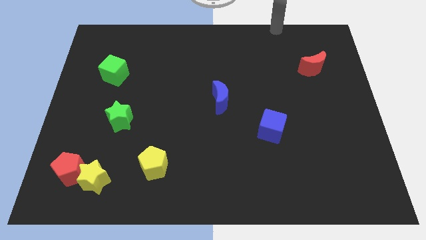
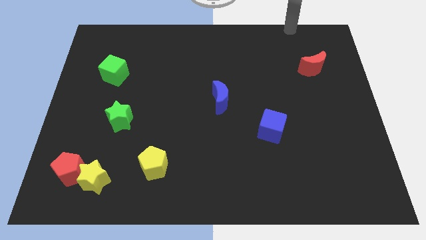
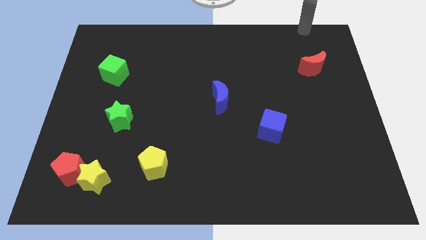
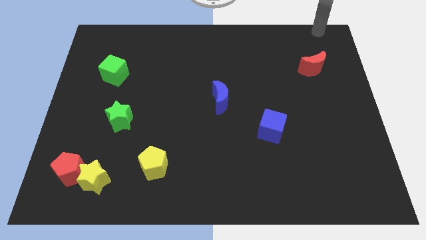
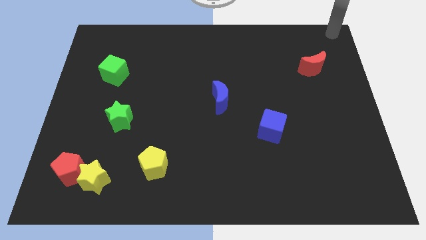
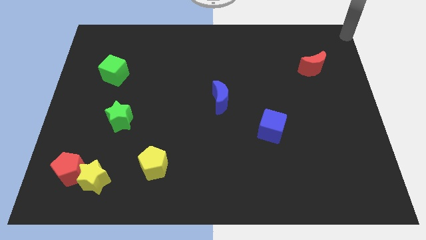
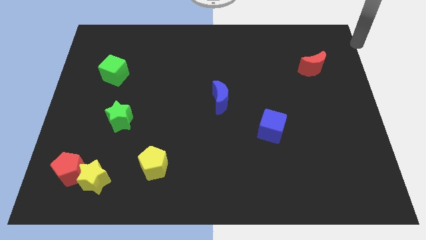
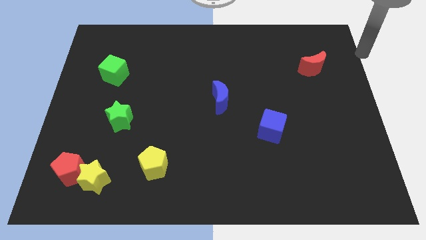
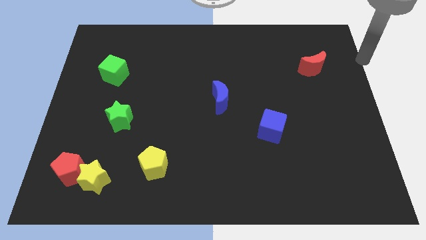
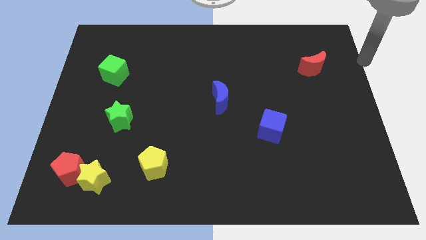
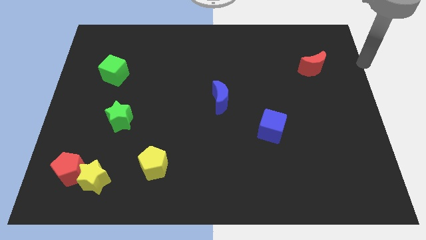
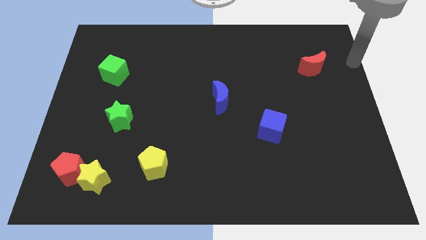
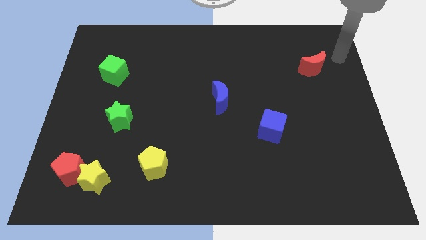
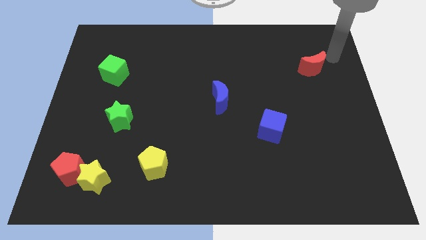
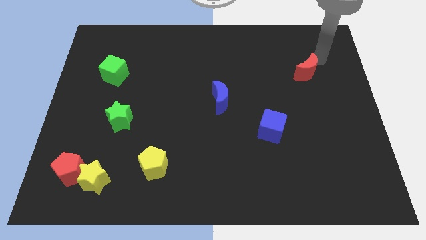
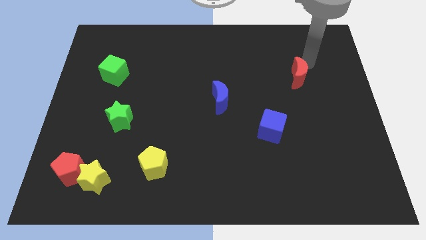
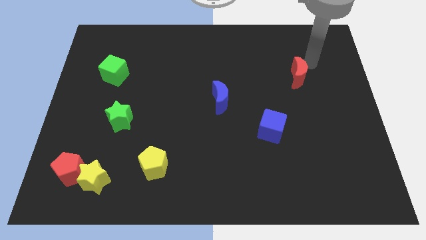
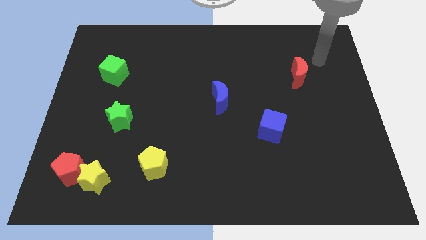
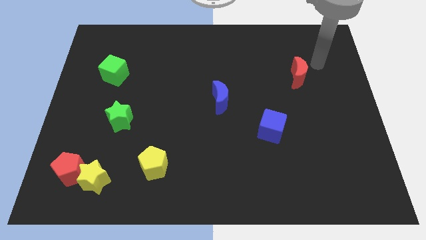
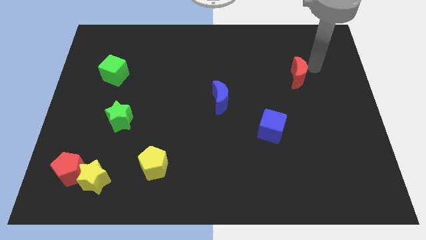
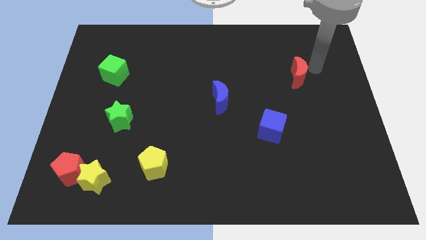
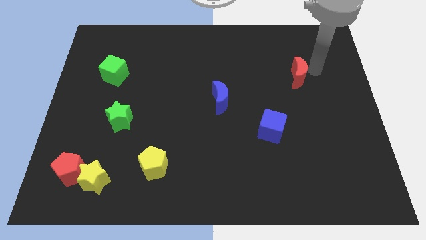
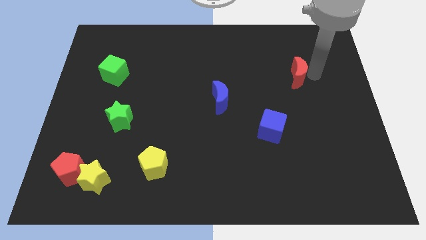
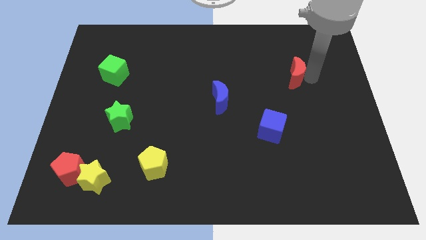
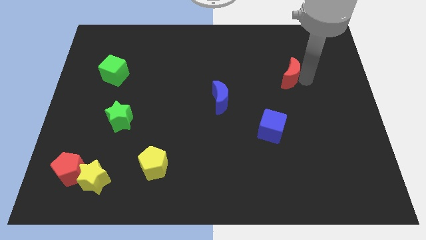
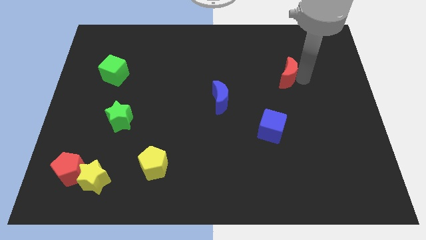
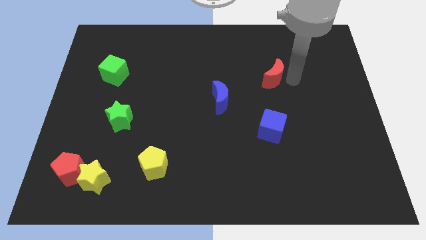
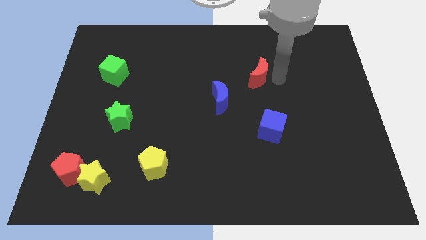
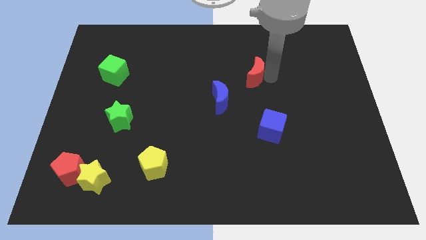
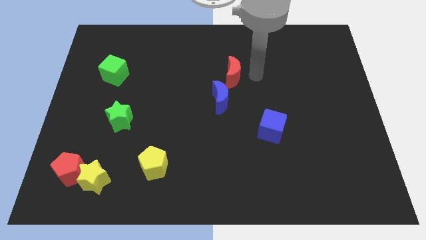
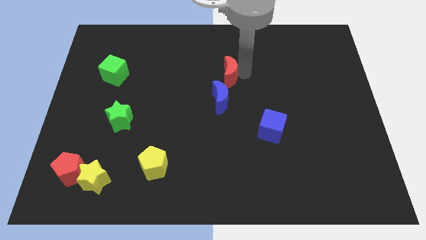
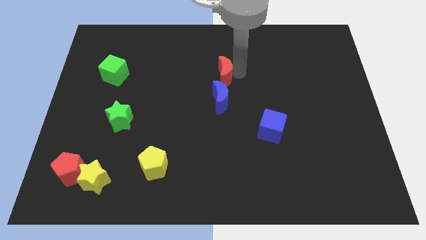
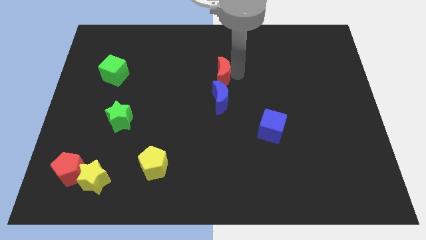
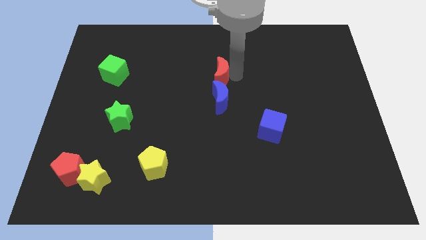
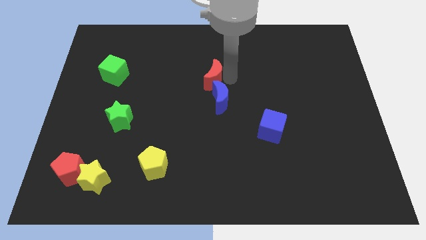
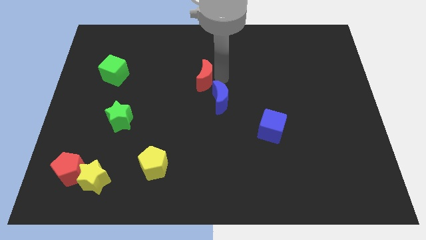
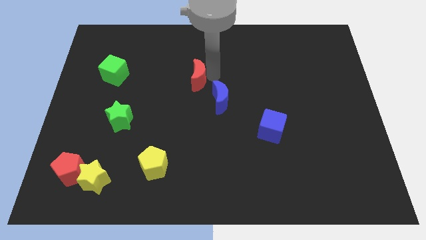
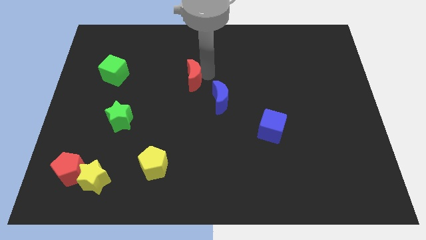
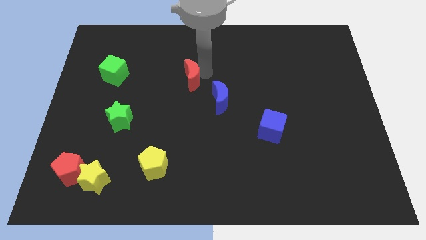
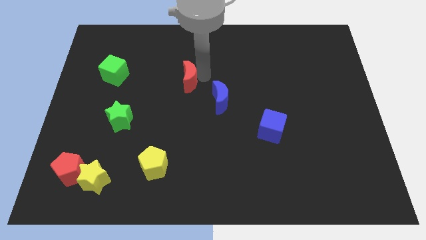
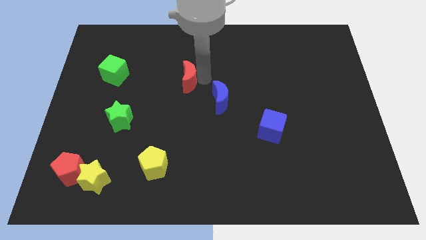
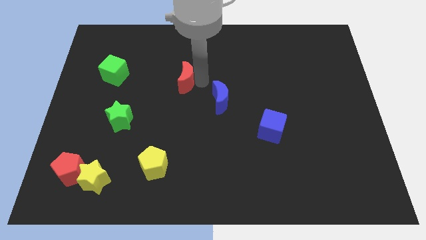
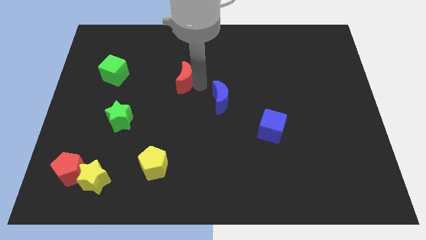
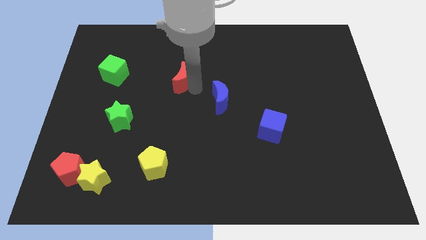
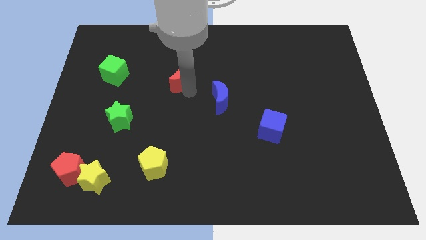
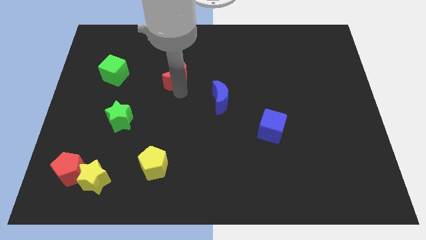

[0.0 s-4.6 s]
place the red moon in between the green cube and blue moon

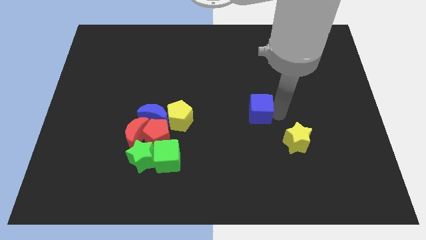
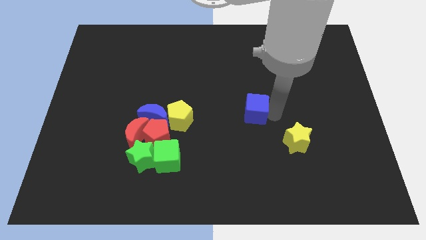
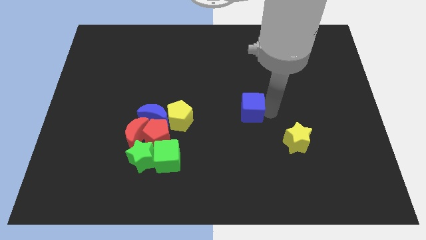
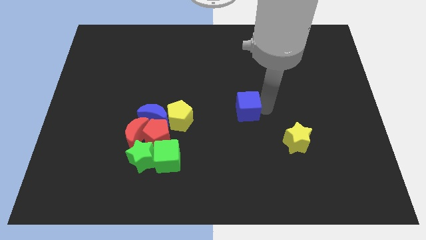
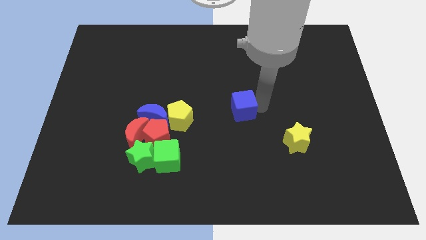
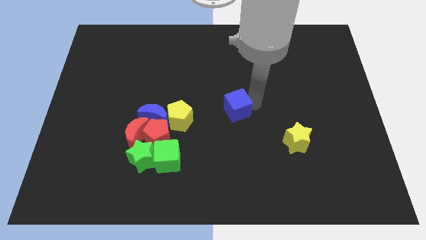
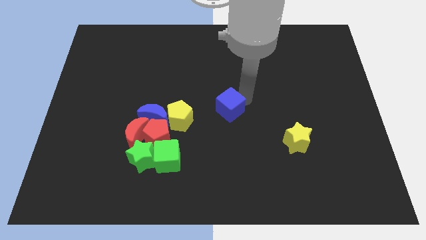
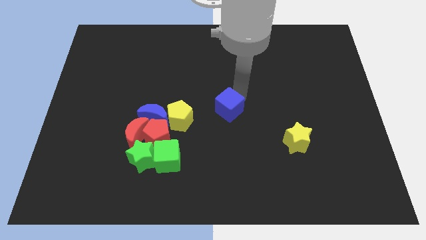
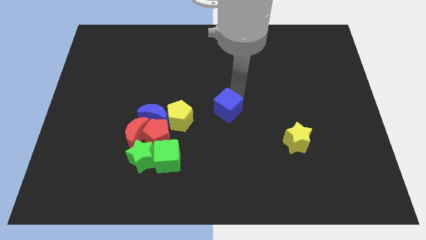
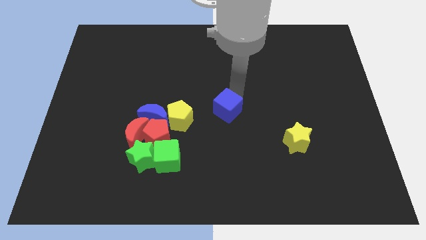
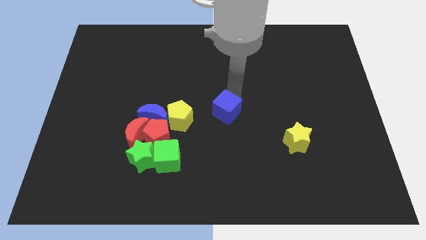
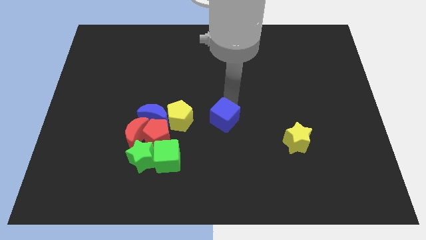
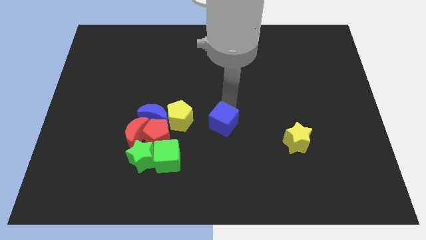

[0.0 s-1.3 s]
place the blue cube to the right of yellow pentagon

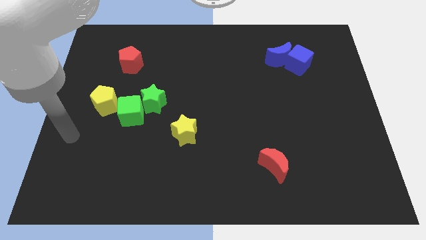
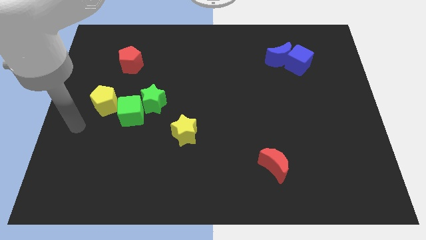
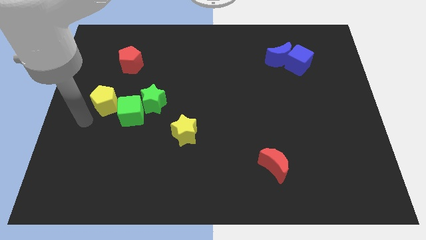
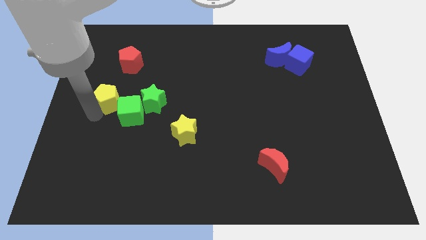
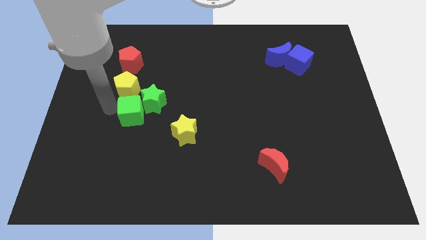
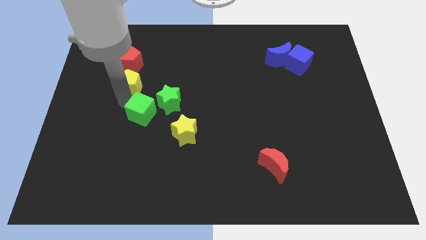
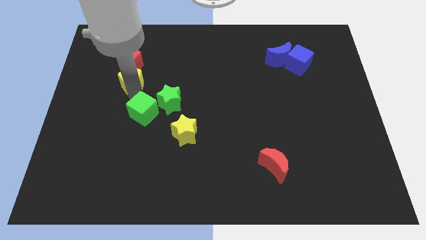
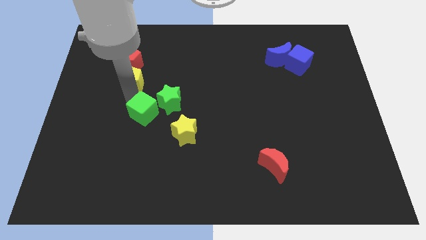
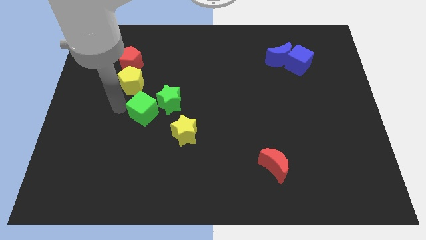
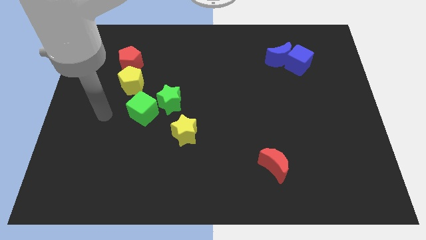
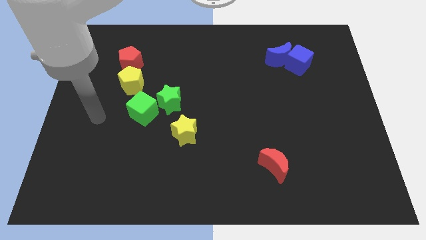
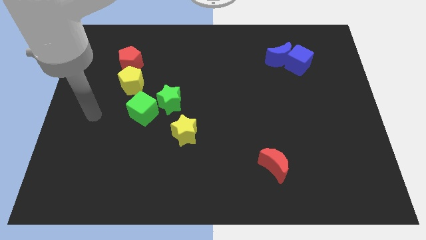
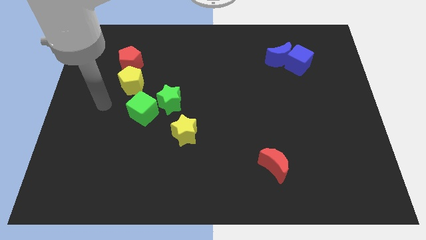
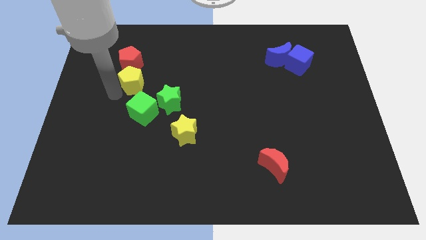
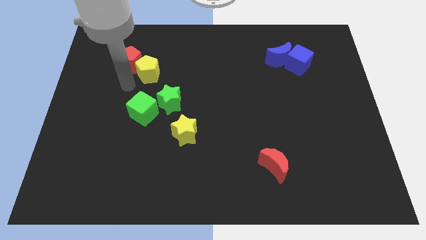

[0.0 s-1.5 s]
place yellow pentagon down to red pentagon

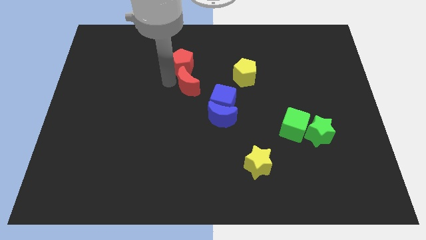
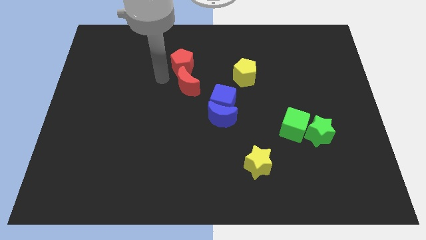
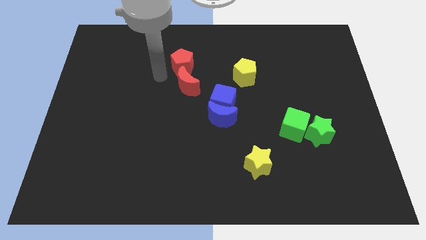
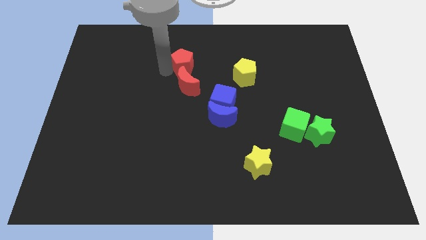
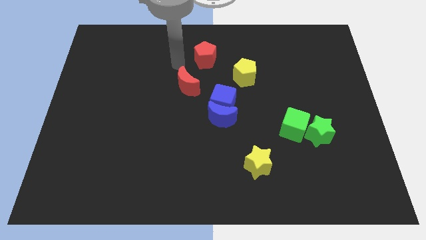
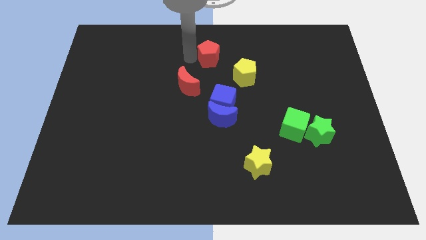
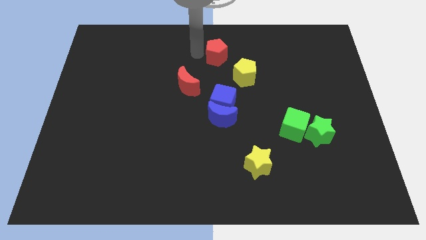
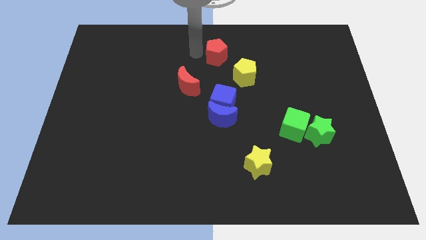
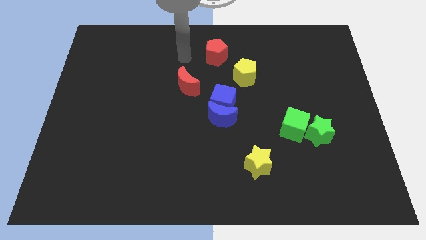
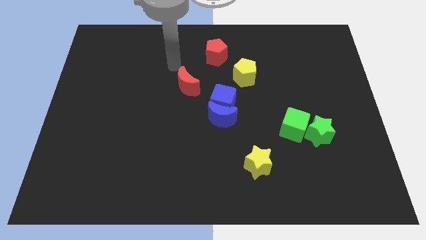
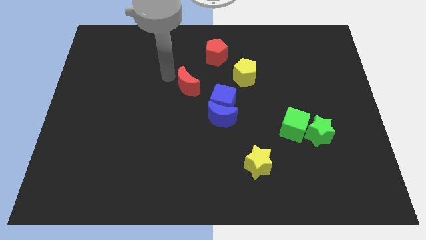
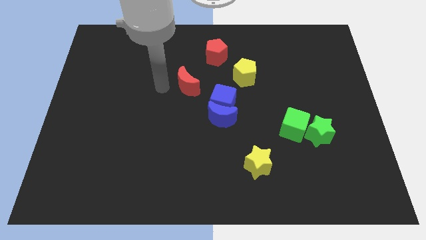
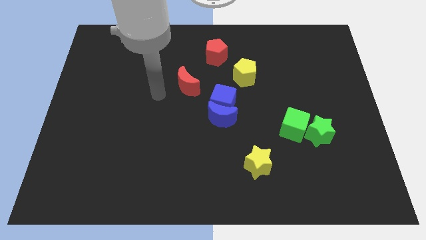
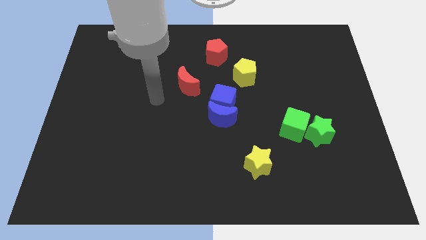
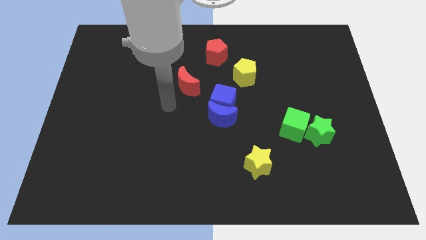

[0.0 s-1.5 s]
slide the red pentagon diagonally top right to the red crescent
